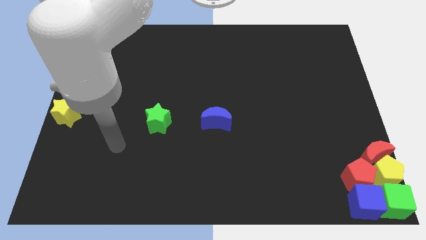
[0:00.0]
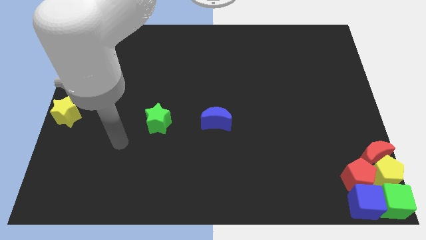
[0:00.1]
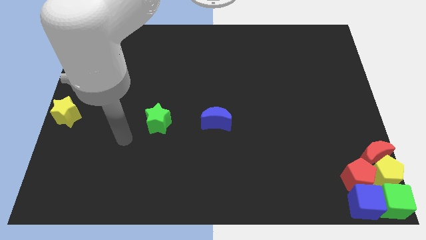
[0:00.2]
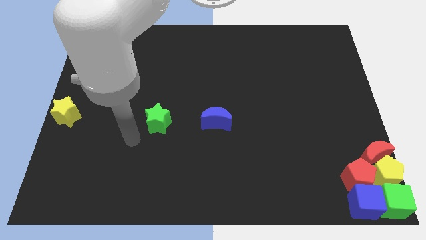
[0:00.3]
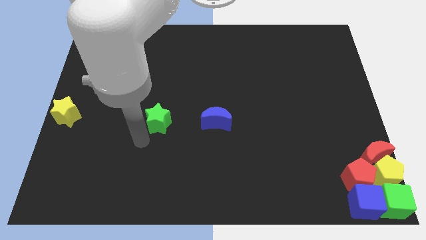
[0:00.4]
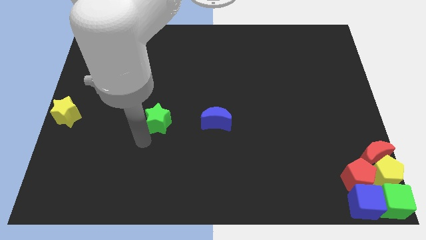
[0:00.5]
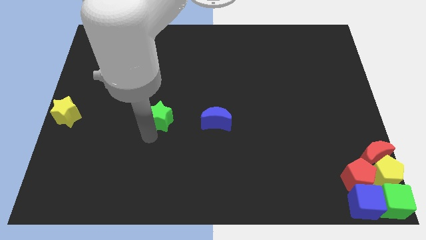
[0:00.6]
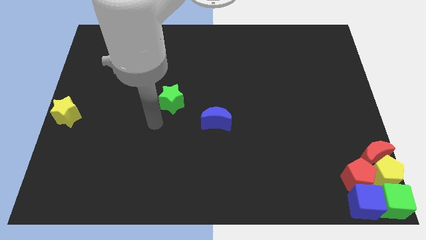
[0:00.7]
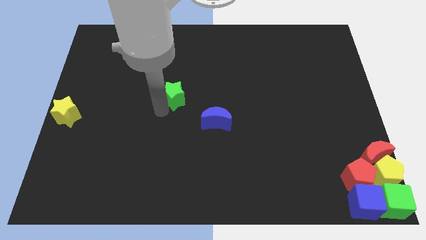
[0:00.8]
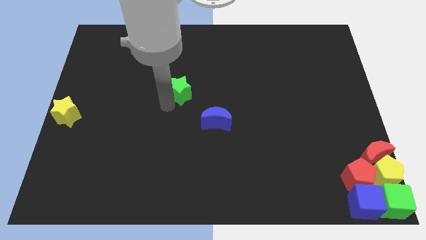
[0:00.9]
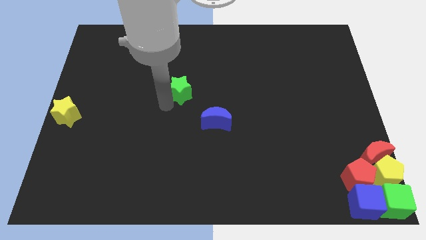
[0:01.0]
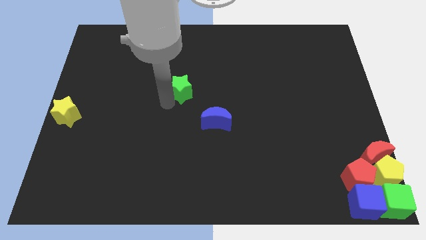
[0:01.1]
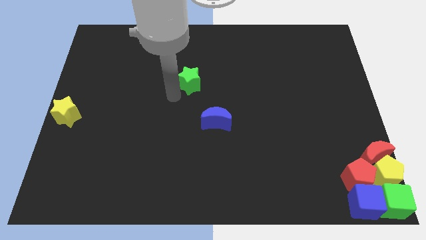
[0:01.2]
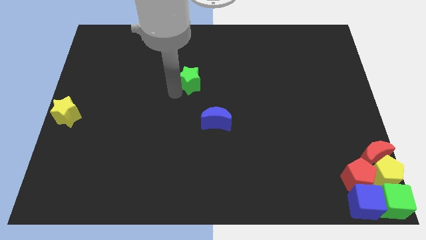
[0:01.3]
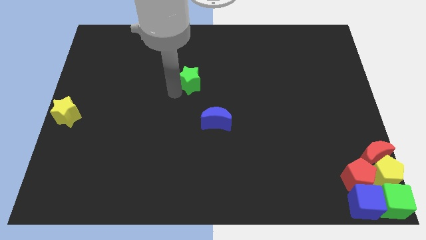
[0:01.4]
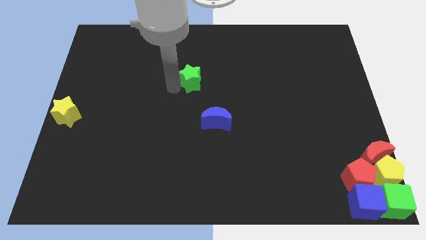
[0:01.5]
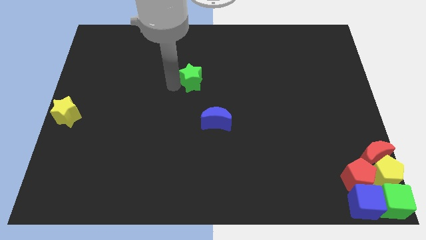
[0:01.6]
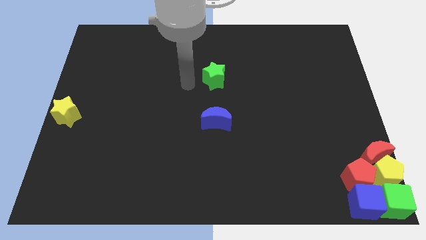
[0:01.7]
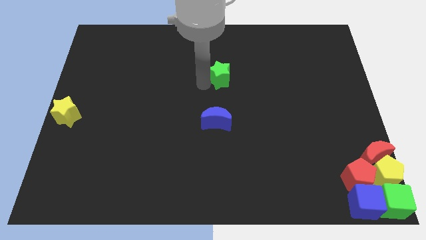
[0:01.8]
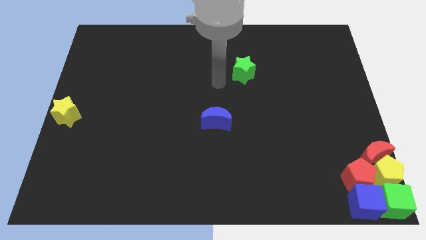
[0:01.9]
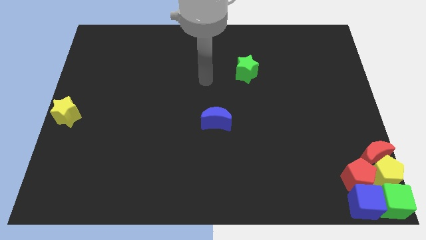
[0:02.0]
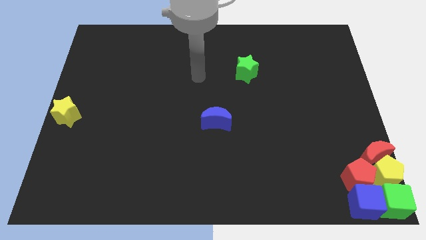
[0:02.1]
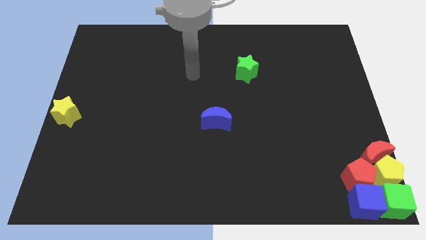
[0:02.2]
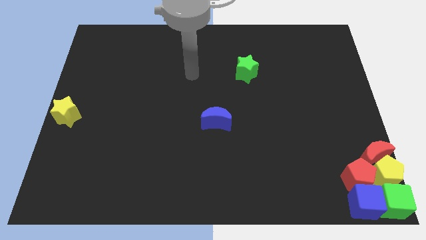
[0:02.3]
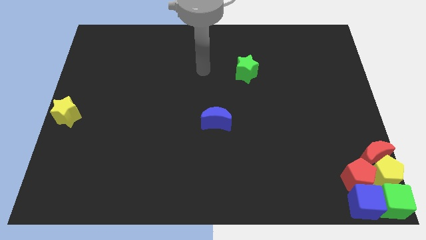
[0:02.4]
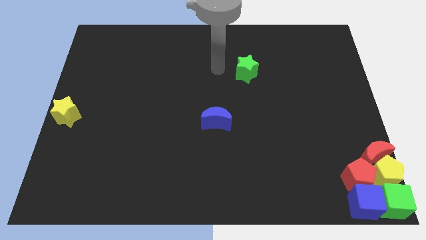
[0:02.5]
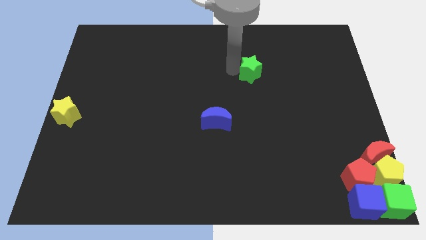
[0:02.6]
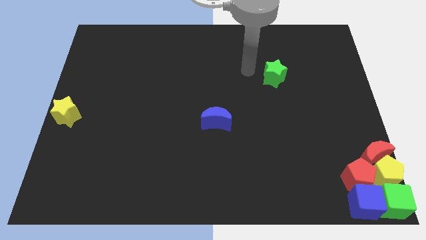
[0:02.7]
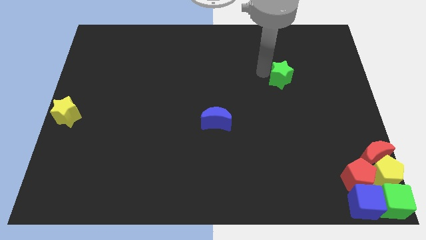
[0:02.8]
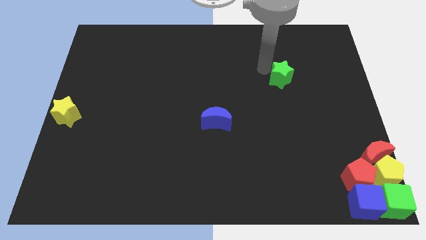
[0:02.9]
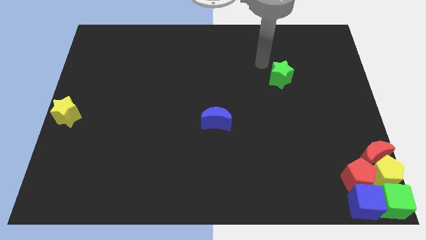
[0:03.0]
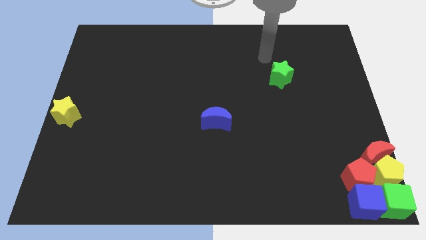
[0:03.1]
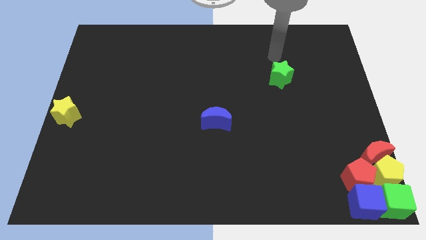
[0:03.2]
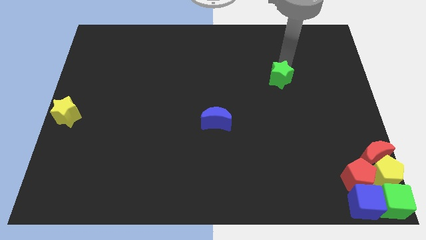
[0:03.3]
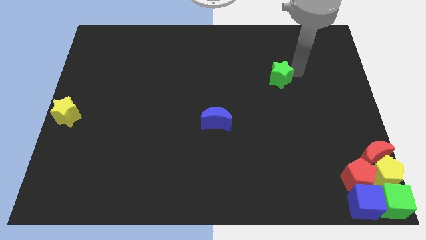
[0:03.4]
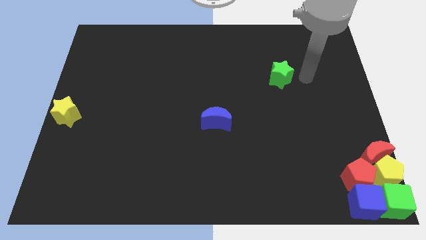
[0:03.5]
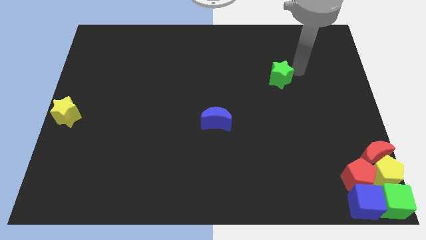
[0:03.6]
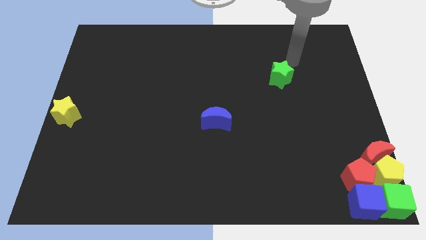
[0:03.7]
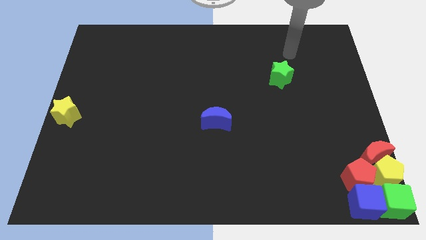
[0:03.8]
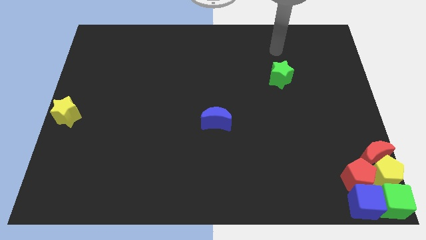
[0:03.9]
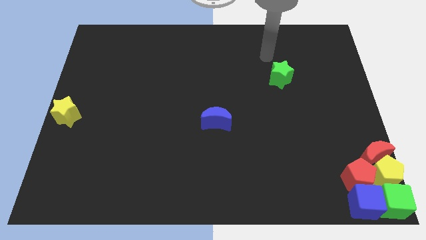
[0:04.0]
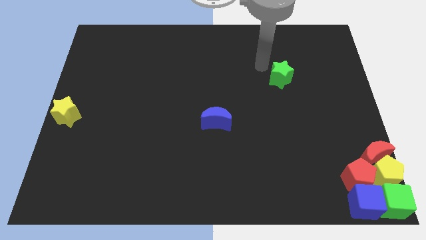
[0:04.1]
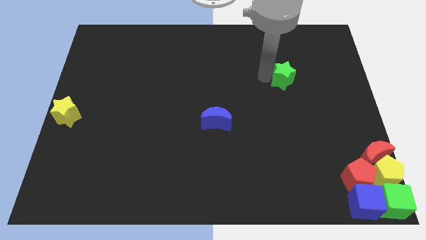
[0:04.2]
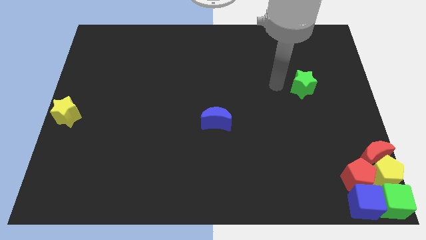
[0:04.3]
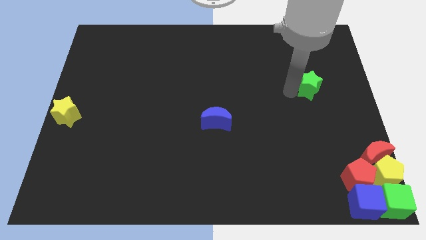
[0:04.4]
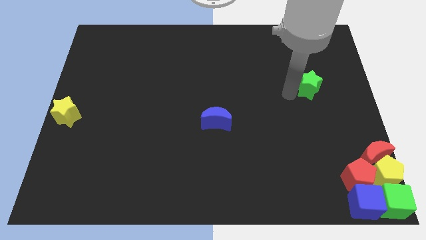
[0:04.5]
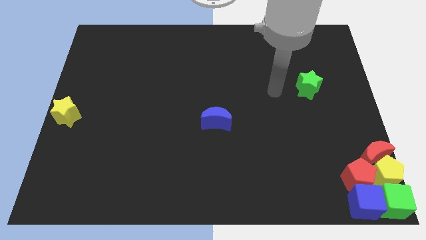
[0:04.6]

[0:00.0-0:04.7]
push the green star to the right side of the board

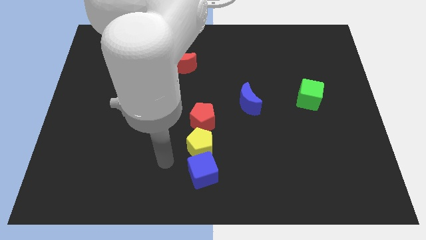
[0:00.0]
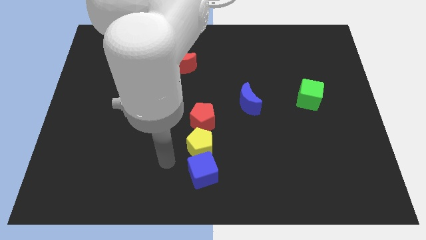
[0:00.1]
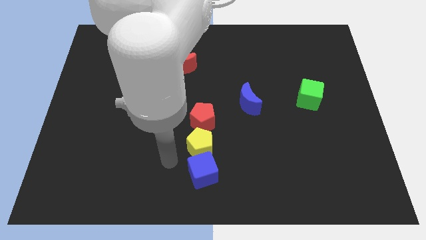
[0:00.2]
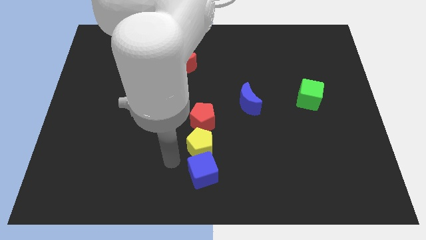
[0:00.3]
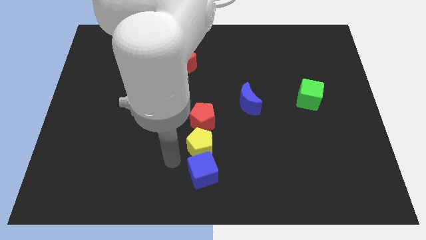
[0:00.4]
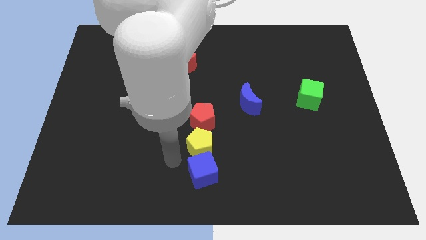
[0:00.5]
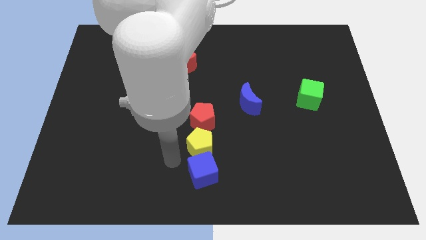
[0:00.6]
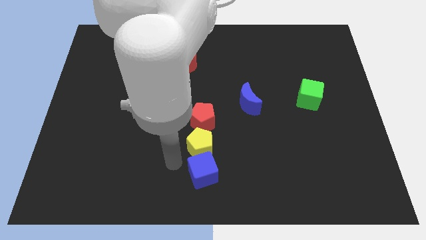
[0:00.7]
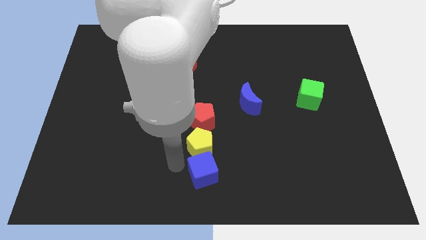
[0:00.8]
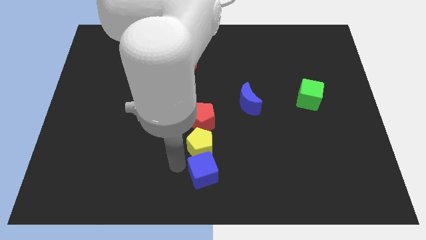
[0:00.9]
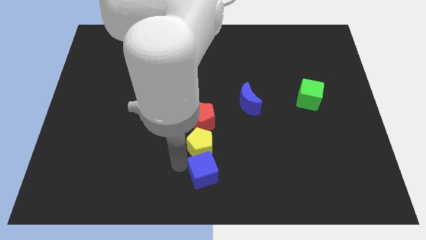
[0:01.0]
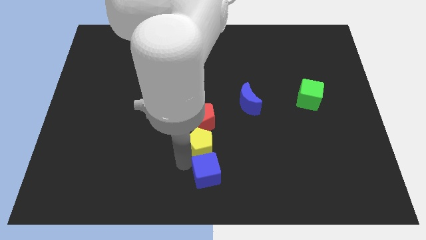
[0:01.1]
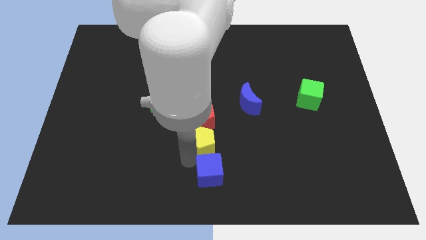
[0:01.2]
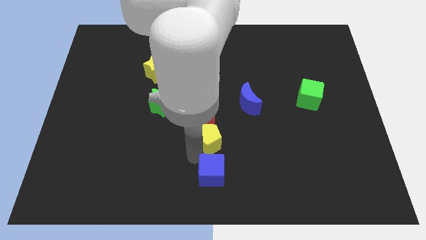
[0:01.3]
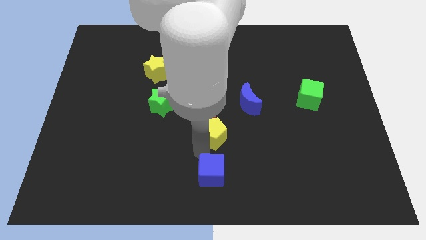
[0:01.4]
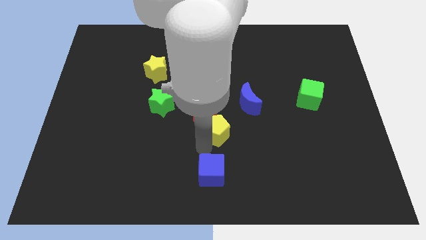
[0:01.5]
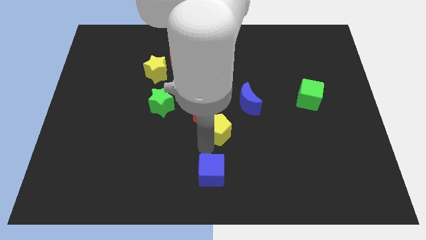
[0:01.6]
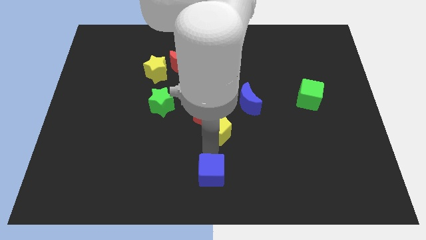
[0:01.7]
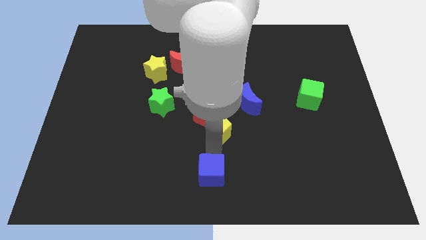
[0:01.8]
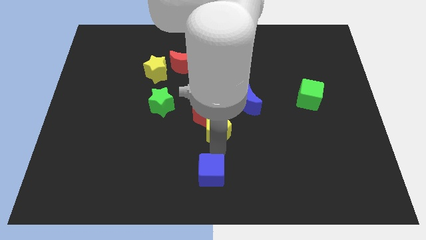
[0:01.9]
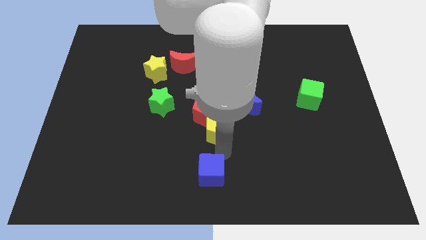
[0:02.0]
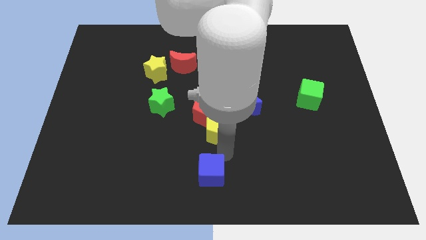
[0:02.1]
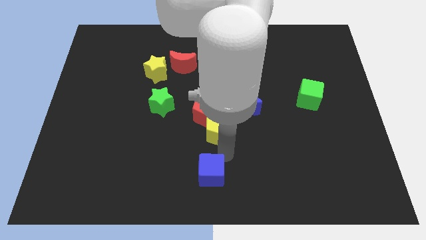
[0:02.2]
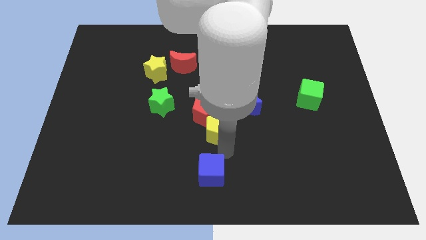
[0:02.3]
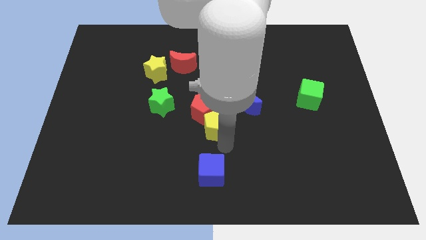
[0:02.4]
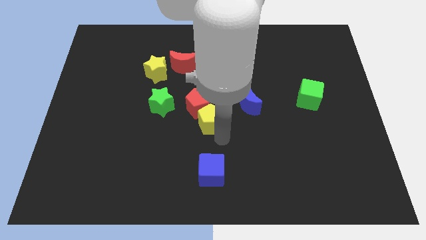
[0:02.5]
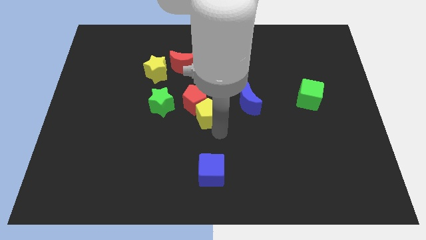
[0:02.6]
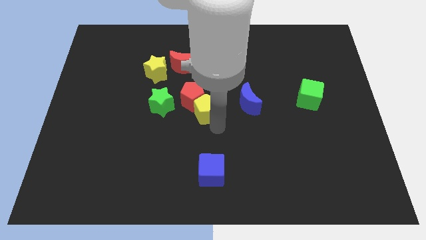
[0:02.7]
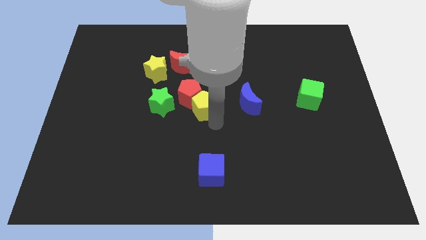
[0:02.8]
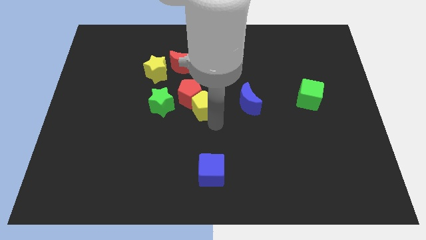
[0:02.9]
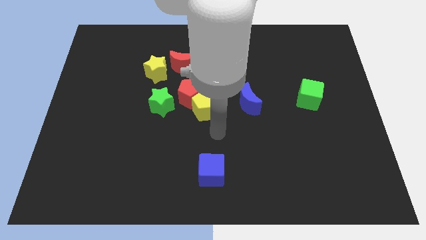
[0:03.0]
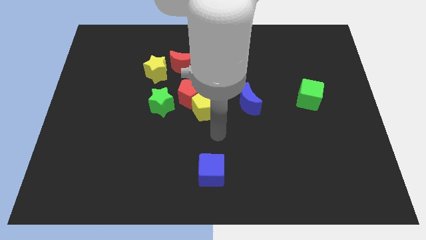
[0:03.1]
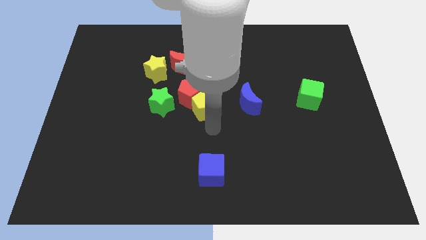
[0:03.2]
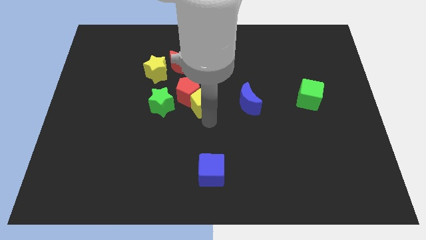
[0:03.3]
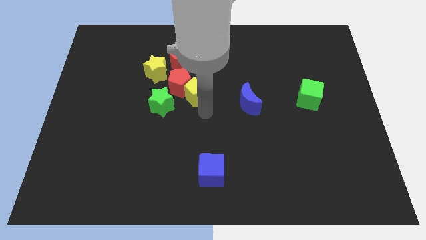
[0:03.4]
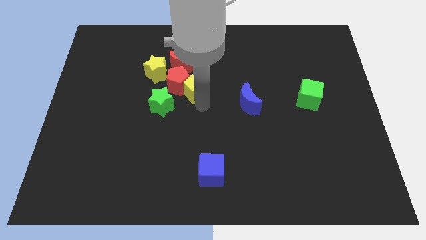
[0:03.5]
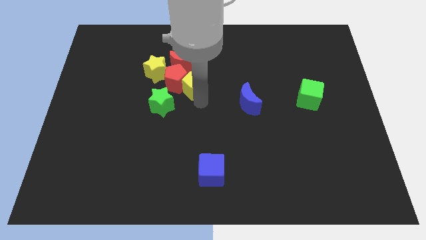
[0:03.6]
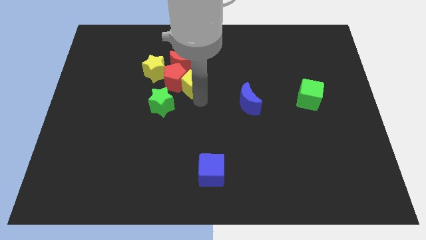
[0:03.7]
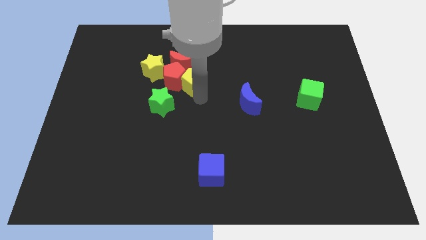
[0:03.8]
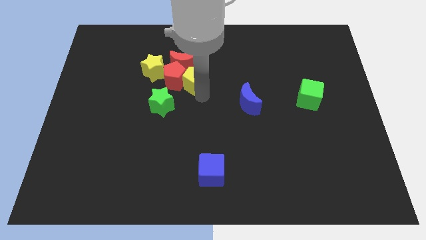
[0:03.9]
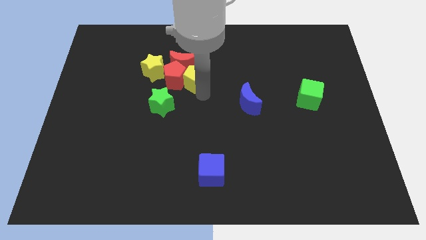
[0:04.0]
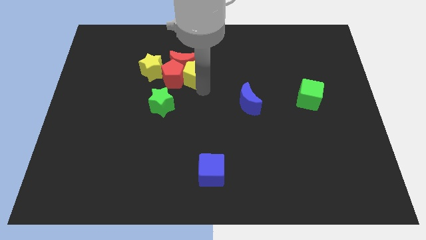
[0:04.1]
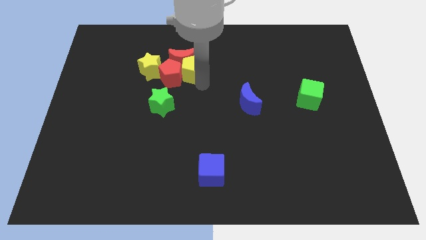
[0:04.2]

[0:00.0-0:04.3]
move the yellow pentagon and red pentagon into red moon

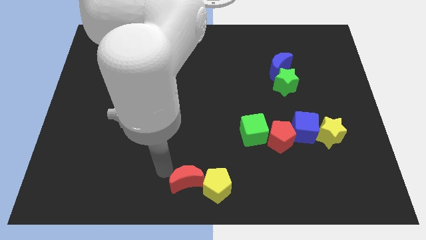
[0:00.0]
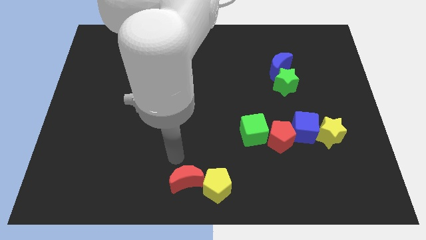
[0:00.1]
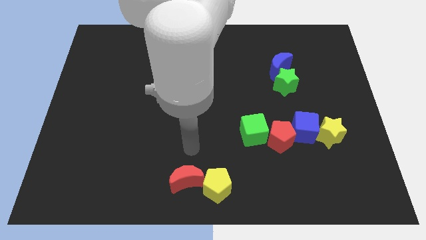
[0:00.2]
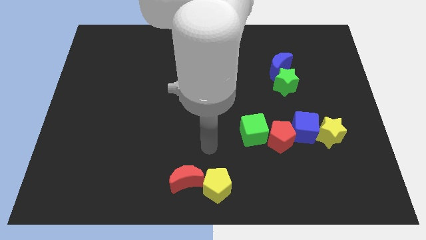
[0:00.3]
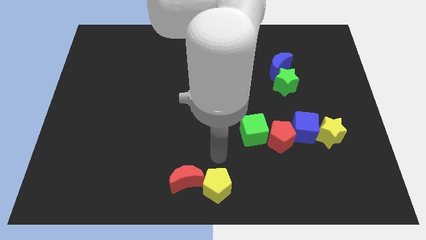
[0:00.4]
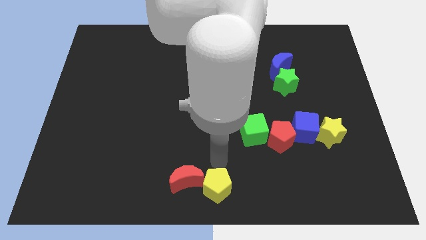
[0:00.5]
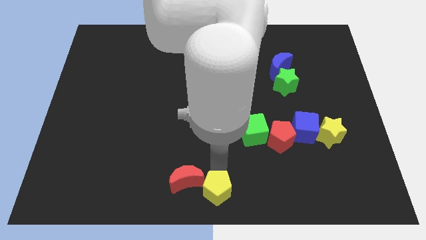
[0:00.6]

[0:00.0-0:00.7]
move the arm near to the yellow pentagon
